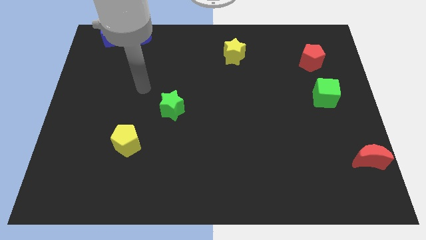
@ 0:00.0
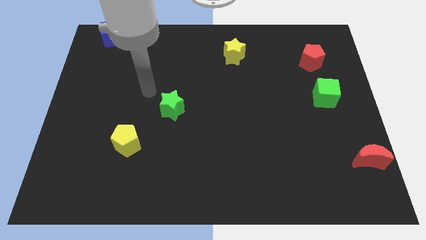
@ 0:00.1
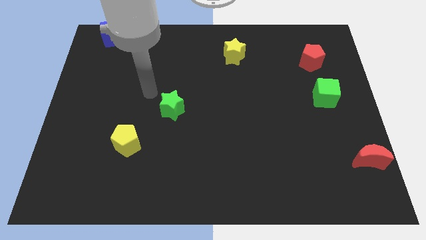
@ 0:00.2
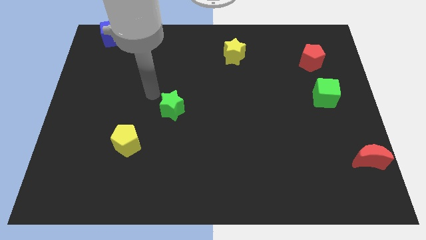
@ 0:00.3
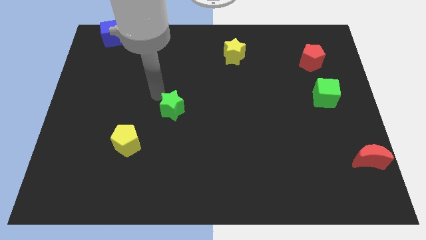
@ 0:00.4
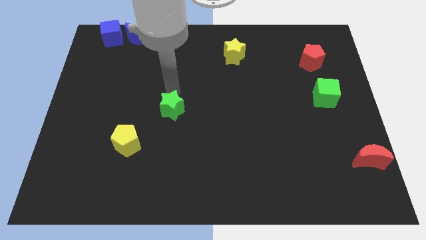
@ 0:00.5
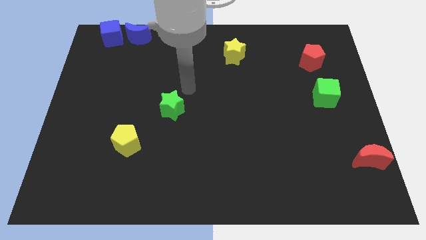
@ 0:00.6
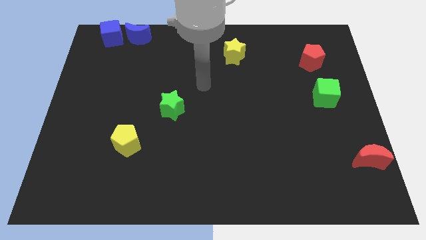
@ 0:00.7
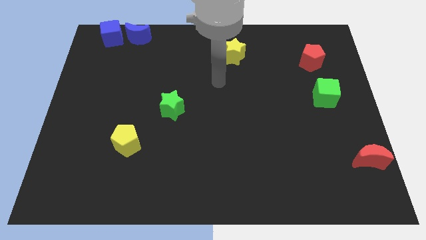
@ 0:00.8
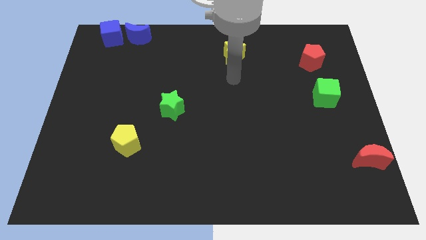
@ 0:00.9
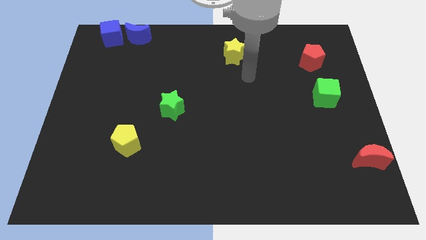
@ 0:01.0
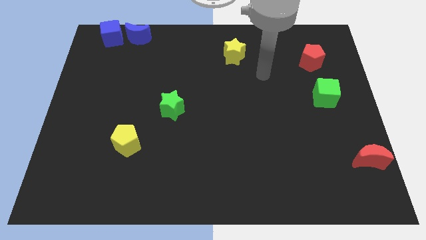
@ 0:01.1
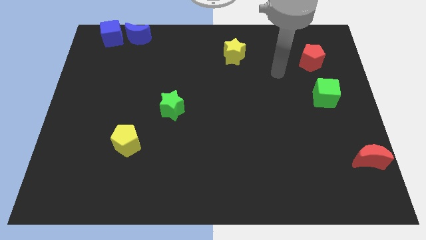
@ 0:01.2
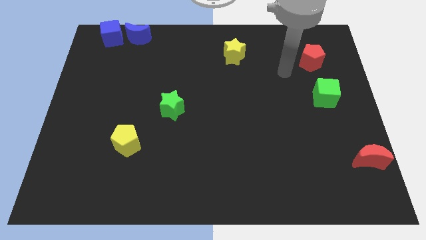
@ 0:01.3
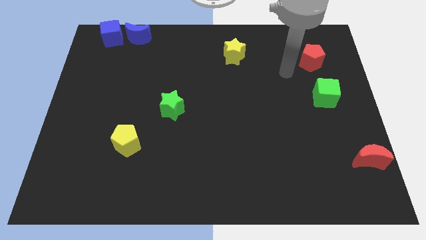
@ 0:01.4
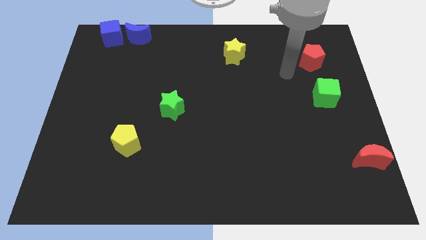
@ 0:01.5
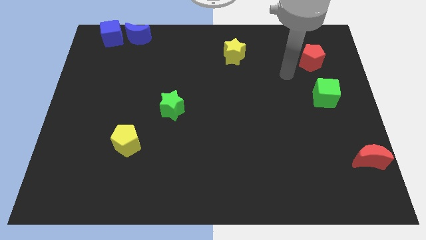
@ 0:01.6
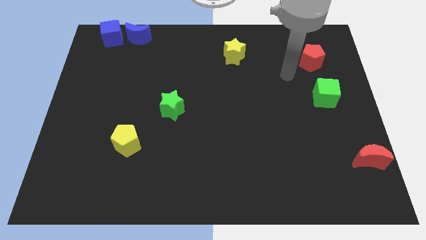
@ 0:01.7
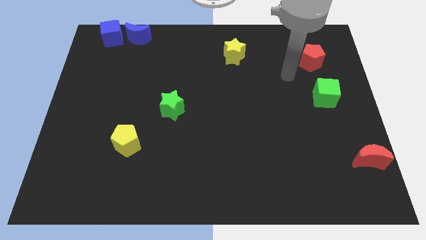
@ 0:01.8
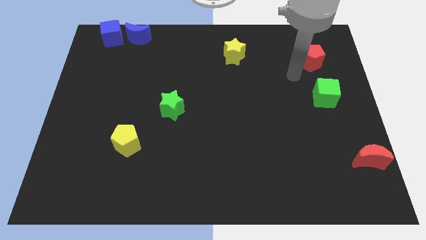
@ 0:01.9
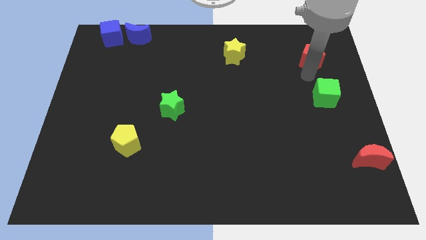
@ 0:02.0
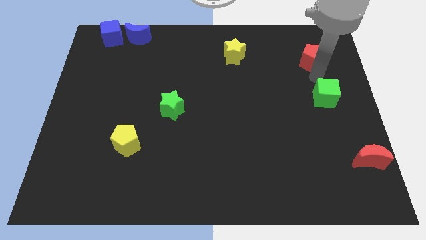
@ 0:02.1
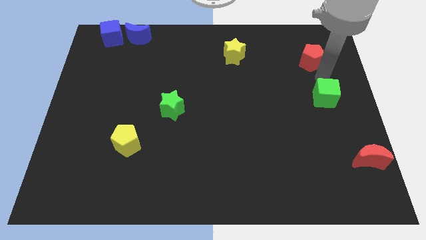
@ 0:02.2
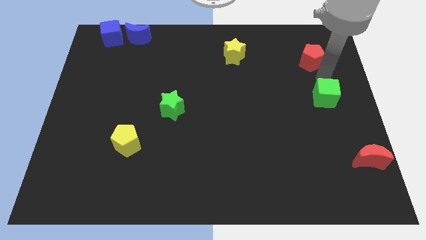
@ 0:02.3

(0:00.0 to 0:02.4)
place arm in between red pentagon and green cube

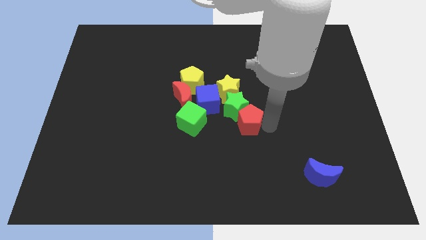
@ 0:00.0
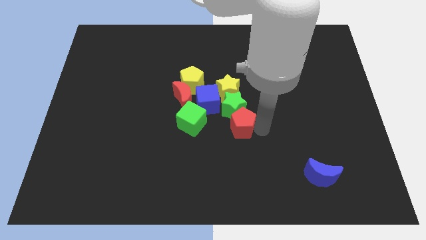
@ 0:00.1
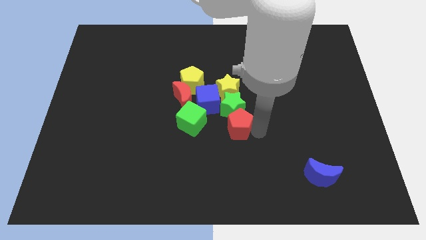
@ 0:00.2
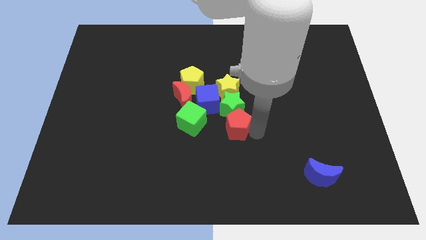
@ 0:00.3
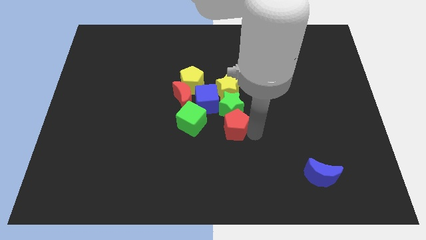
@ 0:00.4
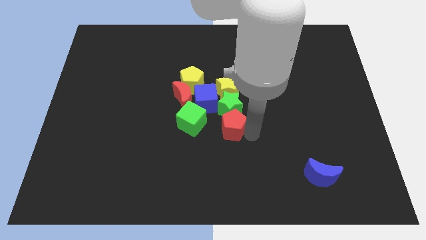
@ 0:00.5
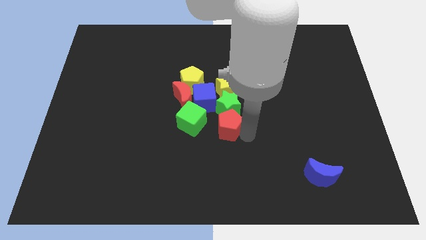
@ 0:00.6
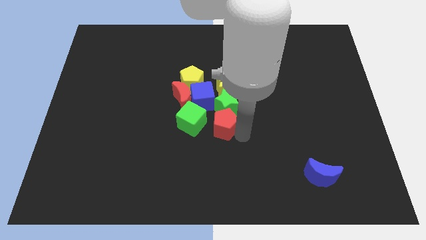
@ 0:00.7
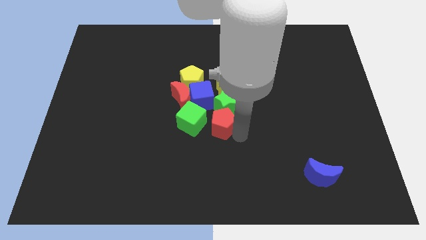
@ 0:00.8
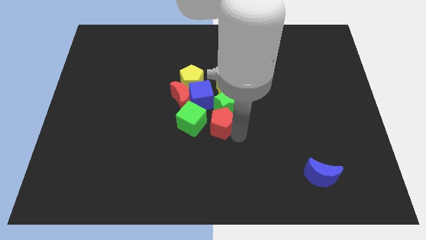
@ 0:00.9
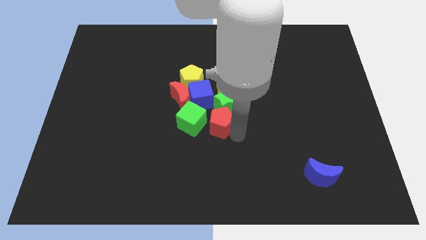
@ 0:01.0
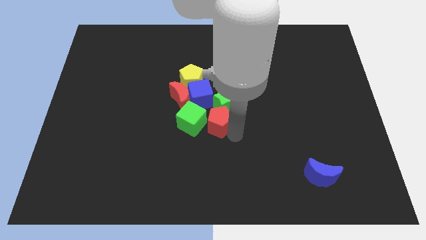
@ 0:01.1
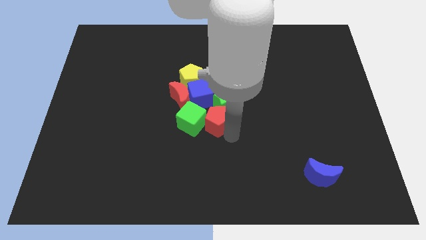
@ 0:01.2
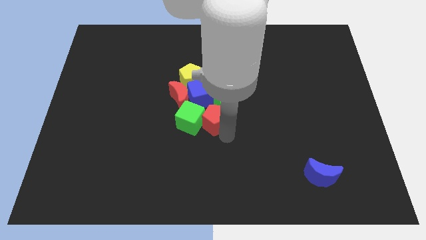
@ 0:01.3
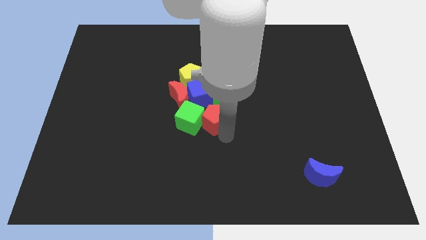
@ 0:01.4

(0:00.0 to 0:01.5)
move the red pentagon into the group of blocks

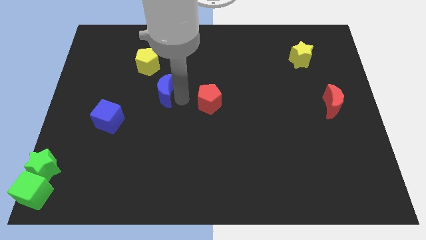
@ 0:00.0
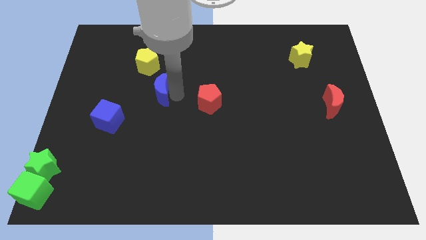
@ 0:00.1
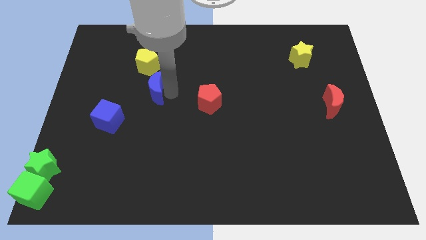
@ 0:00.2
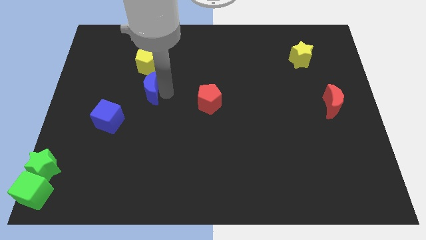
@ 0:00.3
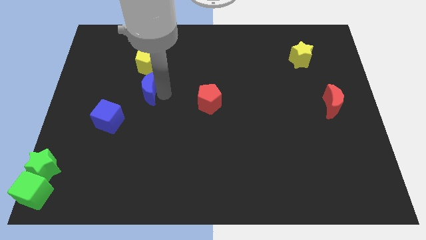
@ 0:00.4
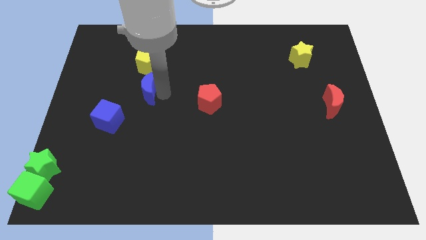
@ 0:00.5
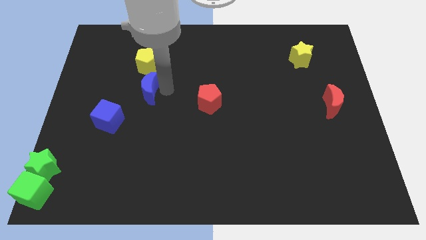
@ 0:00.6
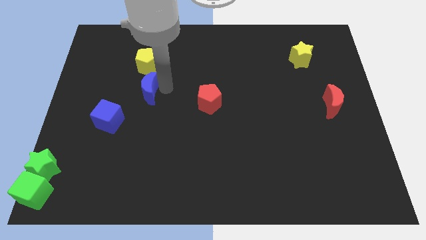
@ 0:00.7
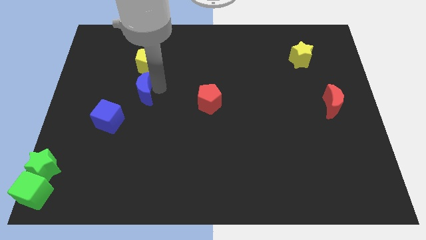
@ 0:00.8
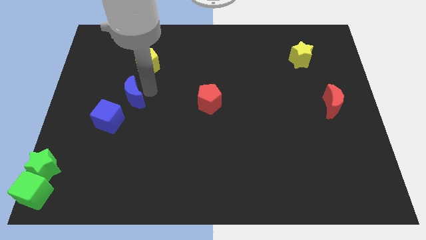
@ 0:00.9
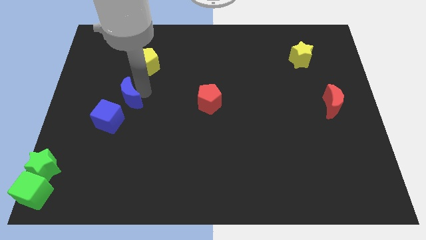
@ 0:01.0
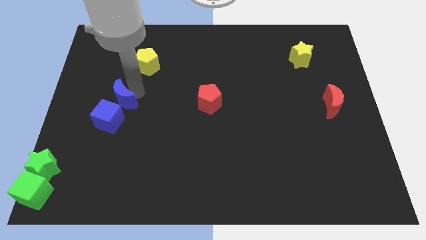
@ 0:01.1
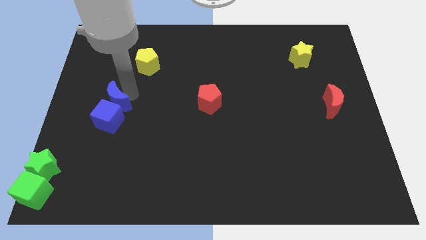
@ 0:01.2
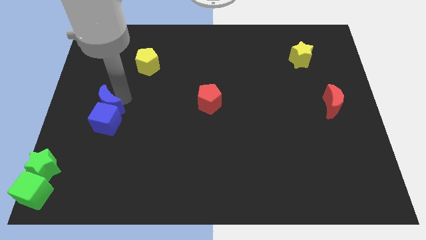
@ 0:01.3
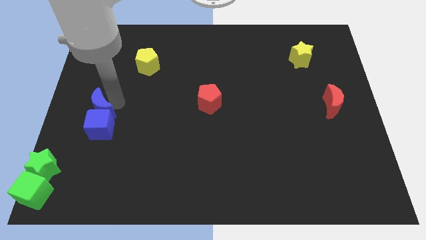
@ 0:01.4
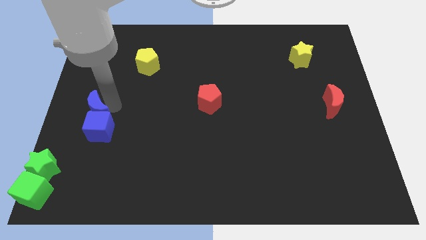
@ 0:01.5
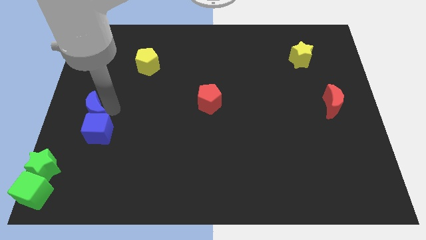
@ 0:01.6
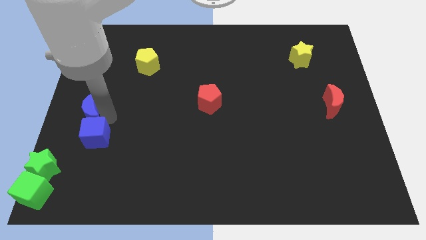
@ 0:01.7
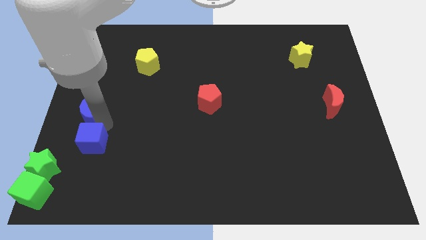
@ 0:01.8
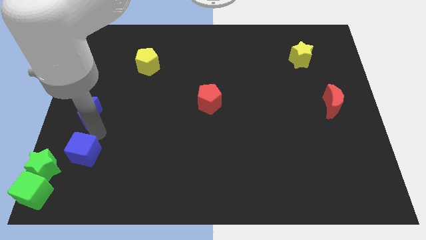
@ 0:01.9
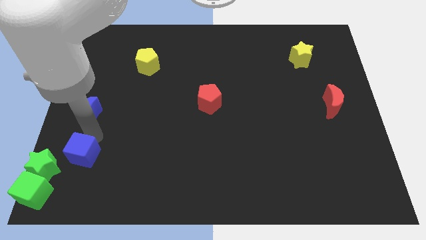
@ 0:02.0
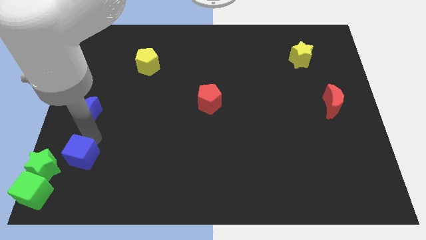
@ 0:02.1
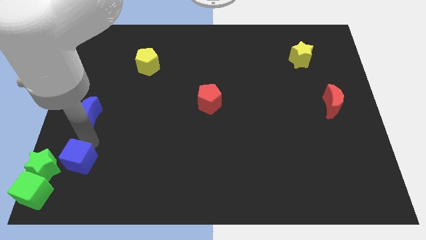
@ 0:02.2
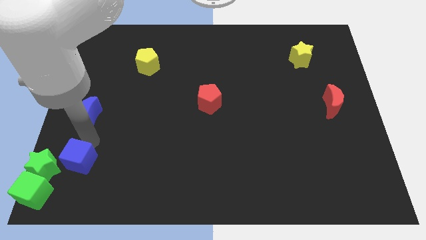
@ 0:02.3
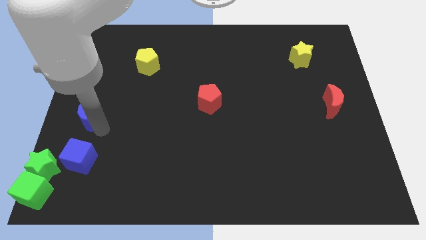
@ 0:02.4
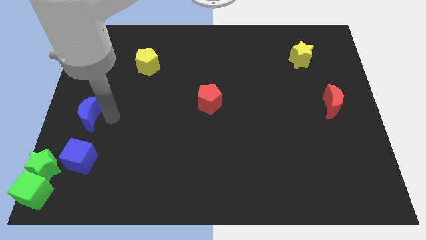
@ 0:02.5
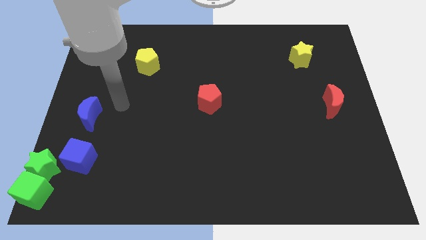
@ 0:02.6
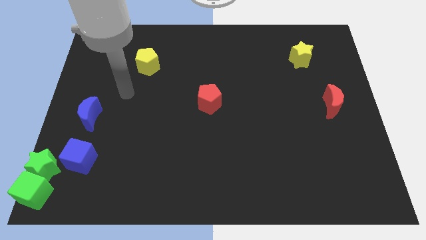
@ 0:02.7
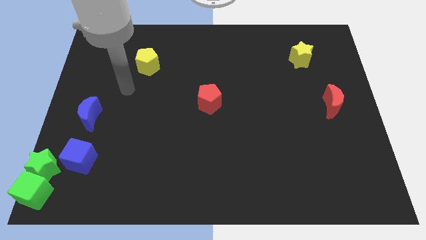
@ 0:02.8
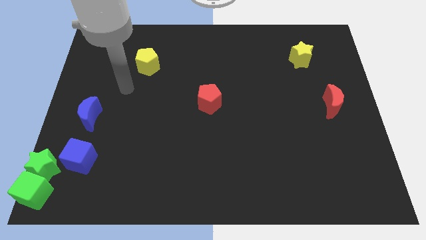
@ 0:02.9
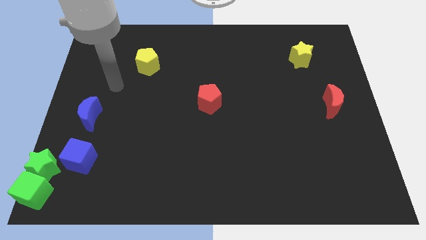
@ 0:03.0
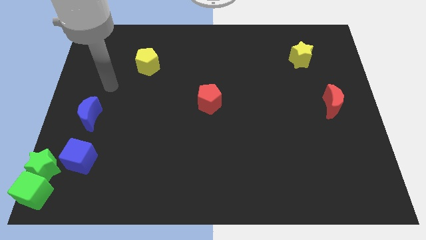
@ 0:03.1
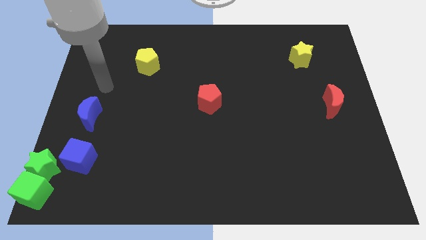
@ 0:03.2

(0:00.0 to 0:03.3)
slide the blue cube close to the green star

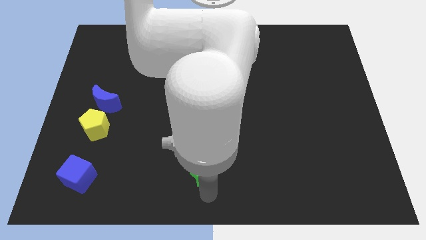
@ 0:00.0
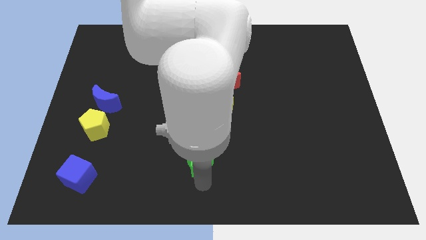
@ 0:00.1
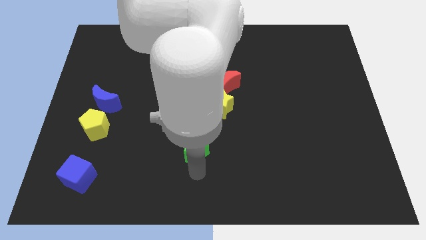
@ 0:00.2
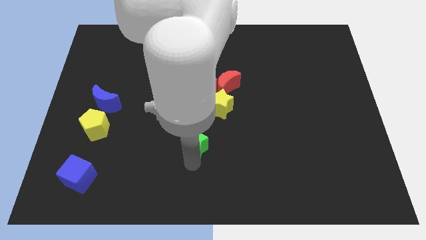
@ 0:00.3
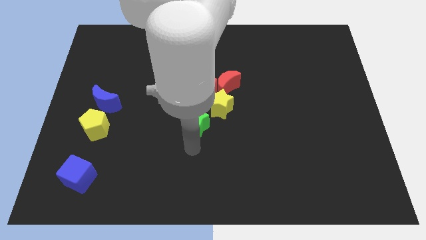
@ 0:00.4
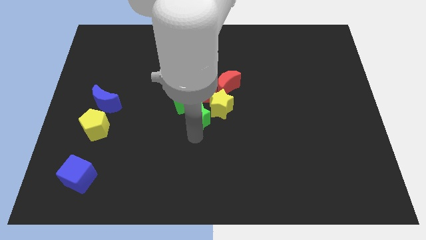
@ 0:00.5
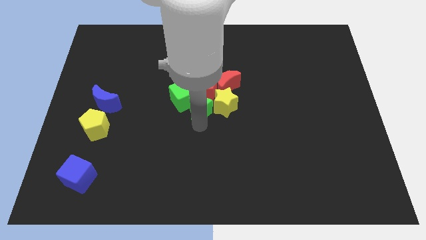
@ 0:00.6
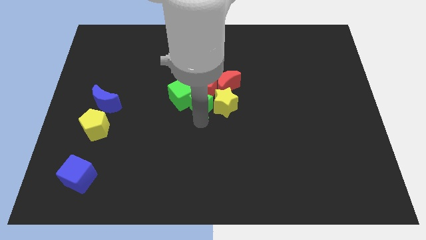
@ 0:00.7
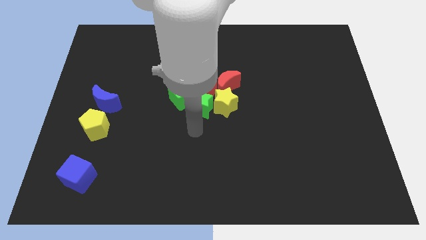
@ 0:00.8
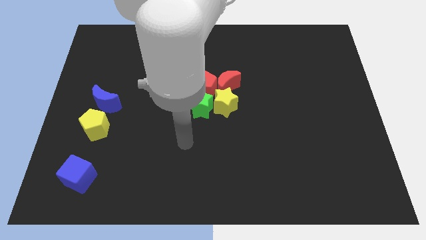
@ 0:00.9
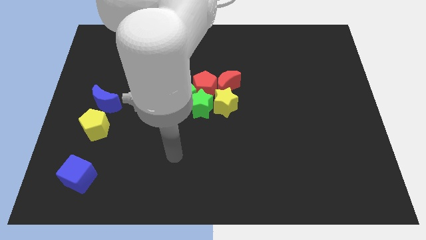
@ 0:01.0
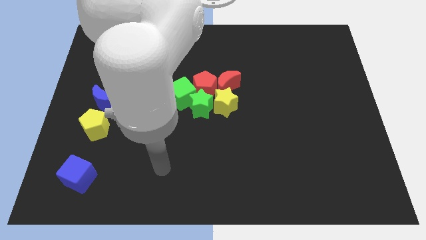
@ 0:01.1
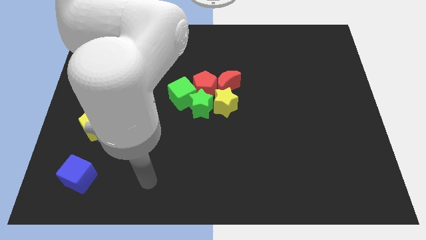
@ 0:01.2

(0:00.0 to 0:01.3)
push the green star to the bottom of the red pentagon

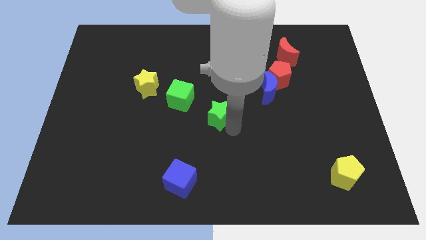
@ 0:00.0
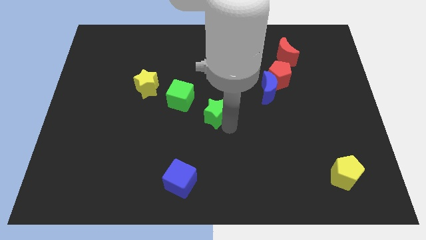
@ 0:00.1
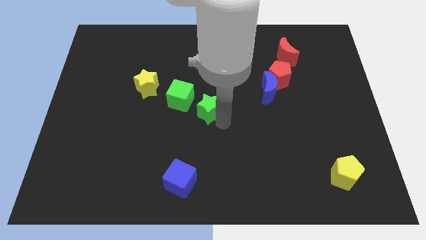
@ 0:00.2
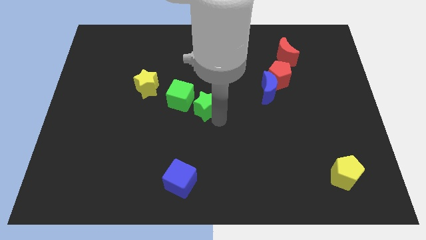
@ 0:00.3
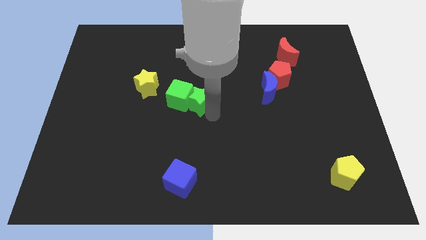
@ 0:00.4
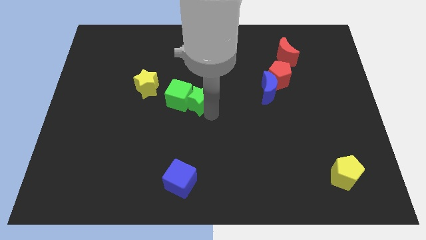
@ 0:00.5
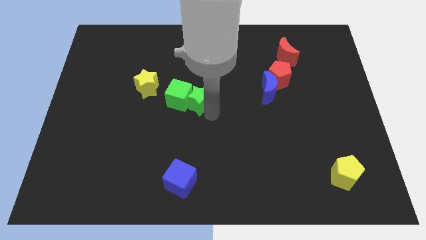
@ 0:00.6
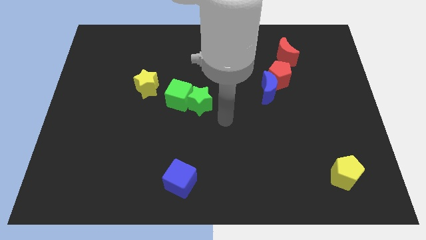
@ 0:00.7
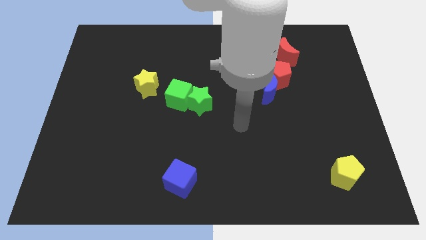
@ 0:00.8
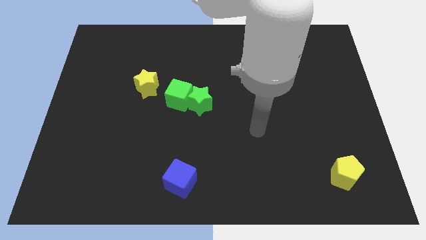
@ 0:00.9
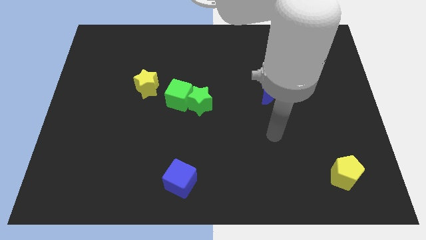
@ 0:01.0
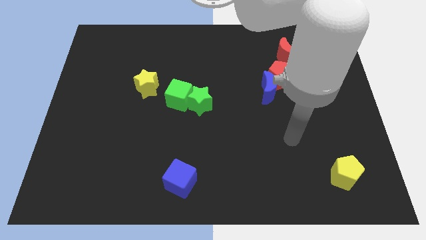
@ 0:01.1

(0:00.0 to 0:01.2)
push the green star into the green cube
